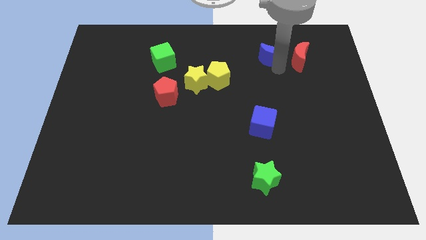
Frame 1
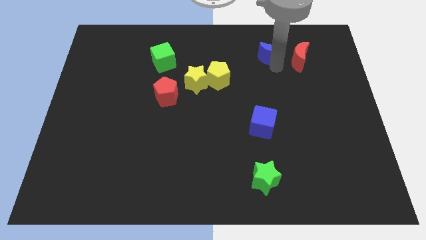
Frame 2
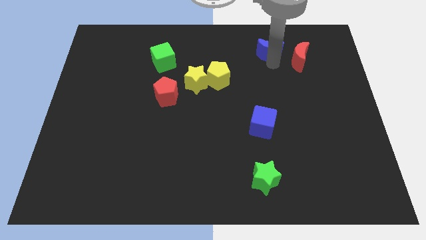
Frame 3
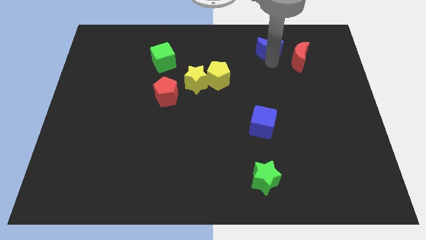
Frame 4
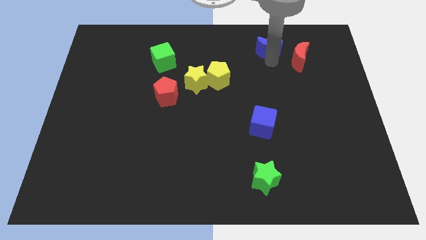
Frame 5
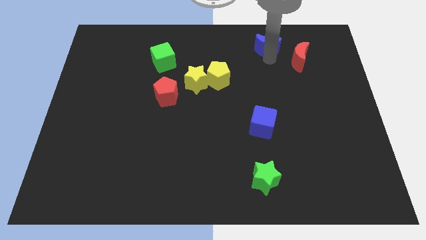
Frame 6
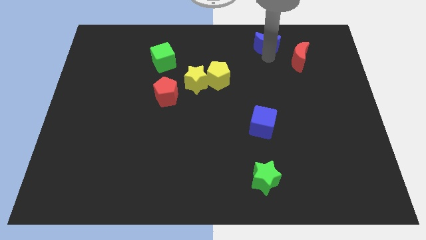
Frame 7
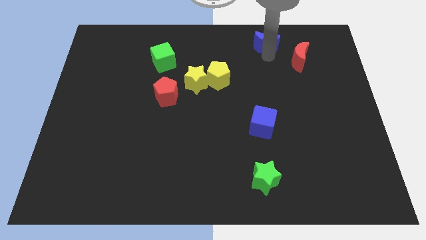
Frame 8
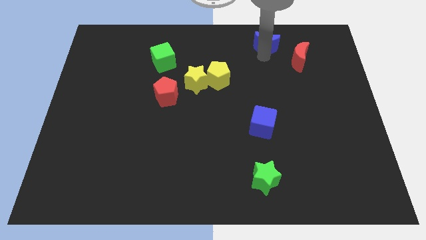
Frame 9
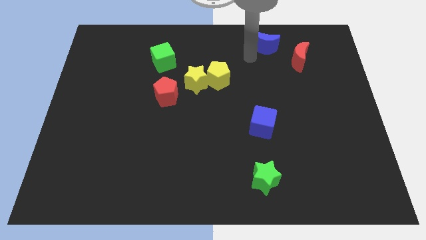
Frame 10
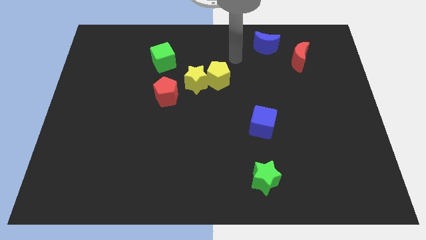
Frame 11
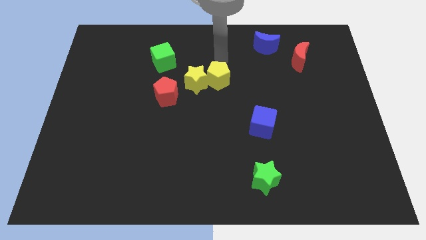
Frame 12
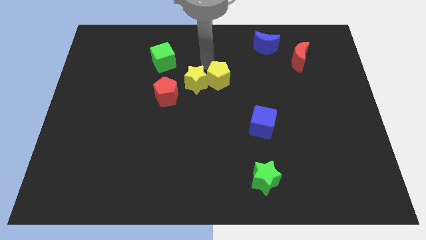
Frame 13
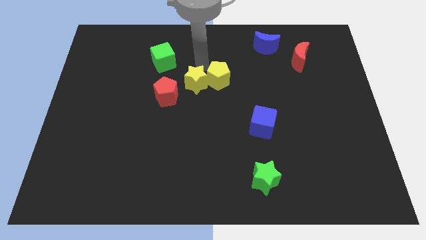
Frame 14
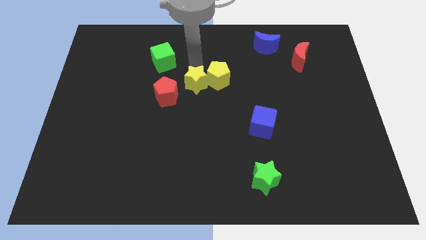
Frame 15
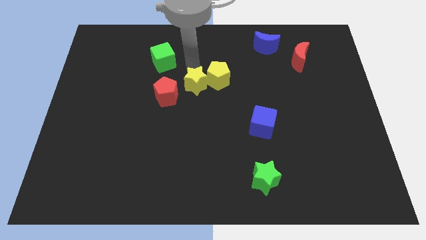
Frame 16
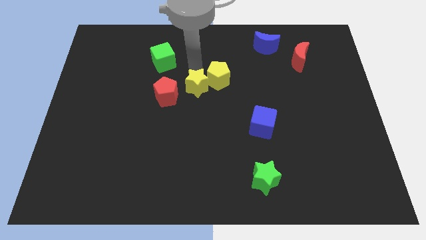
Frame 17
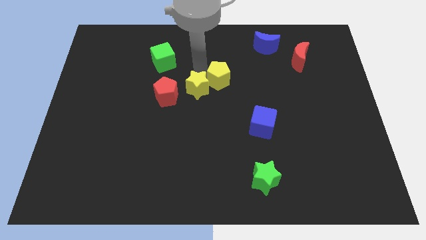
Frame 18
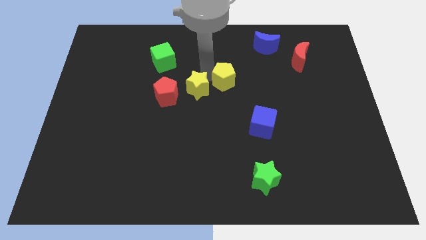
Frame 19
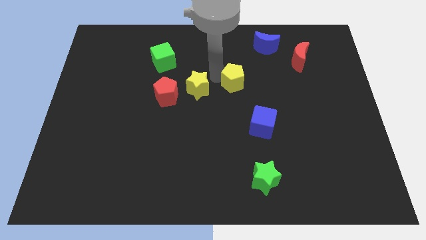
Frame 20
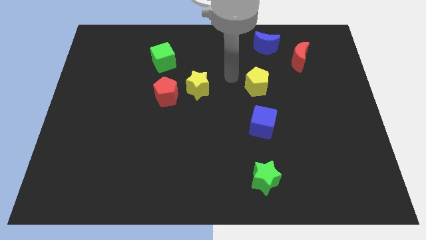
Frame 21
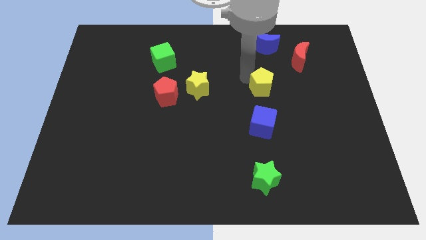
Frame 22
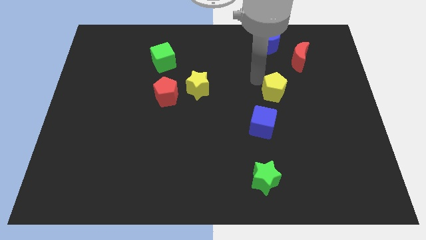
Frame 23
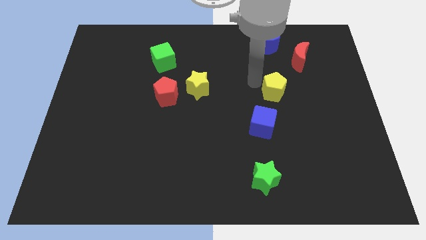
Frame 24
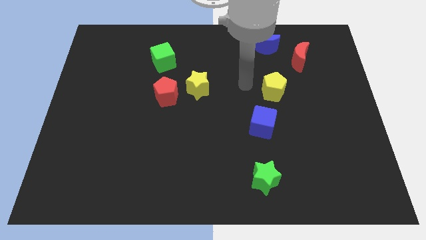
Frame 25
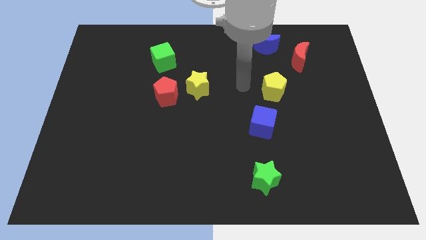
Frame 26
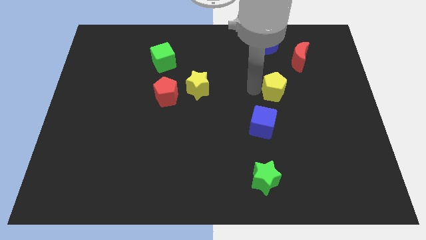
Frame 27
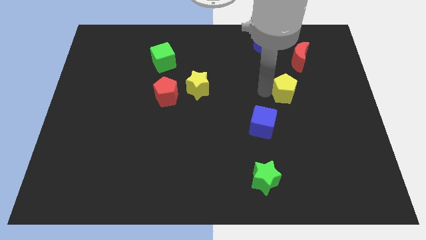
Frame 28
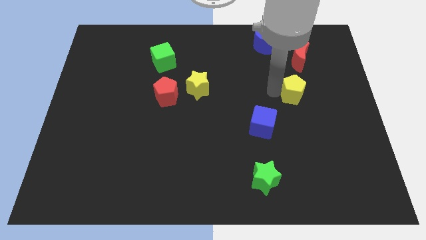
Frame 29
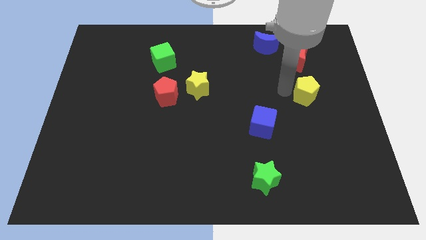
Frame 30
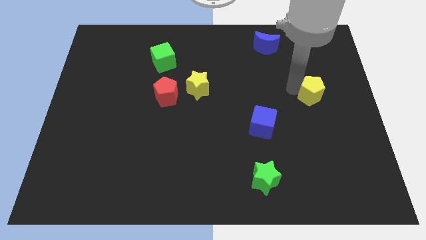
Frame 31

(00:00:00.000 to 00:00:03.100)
move the yellow pentagon towards the center right

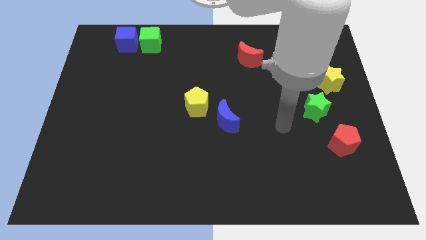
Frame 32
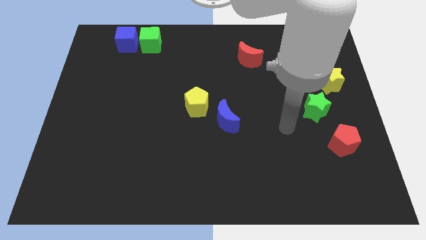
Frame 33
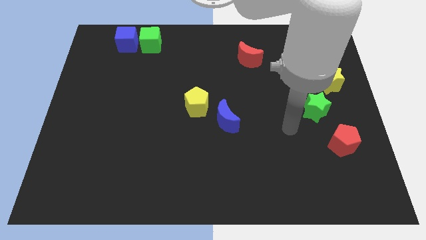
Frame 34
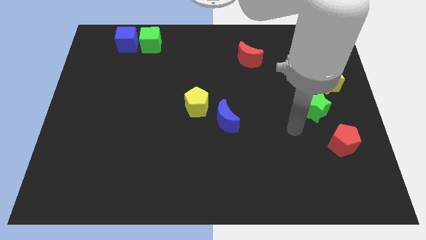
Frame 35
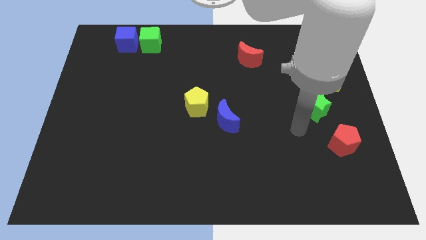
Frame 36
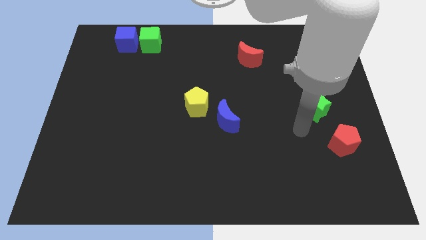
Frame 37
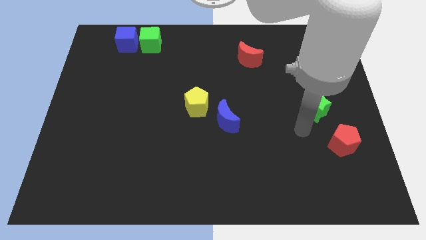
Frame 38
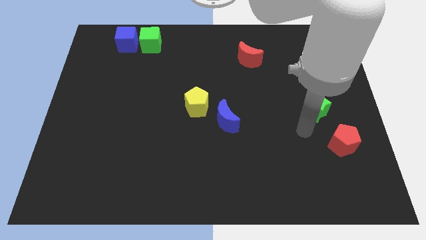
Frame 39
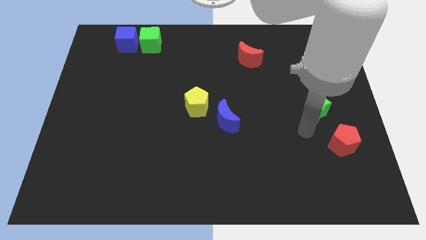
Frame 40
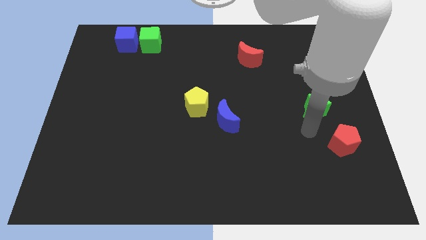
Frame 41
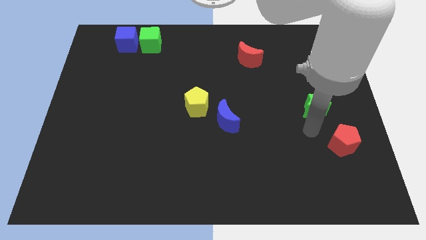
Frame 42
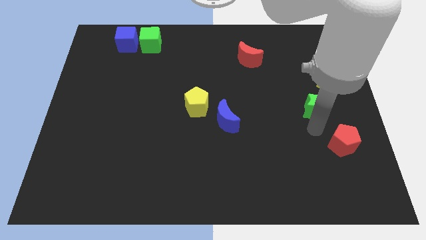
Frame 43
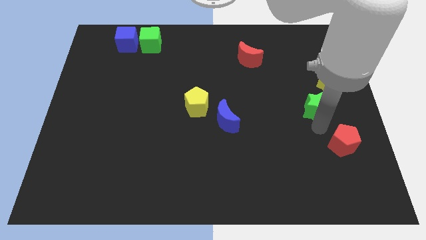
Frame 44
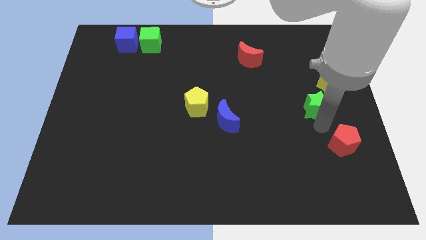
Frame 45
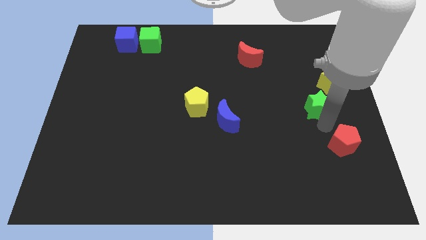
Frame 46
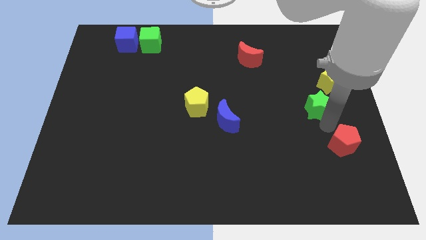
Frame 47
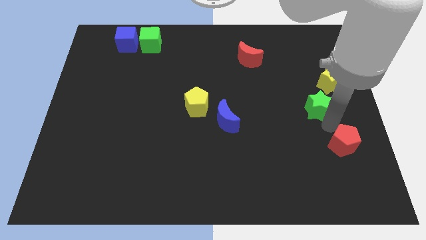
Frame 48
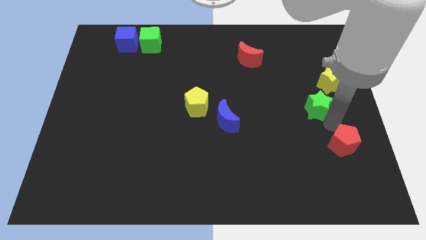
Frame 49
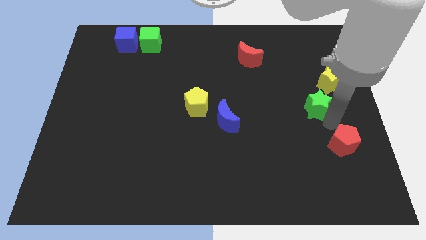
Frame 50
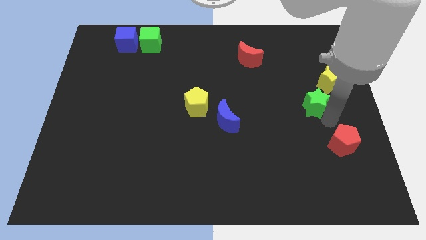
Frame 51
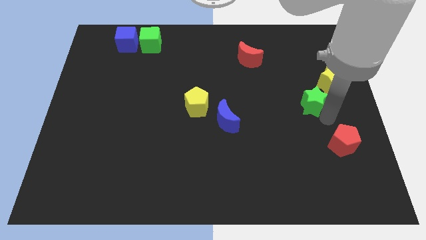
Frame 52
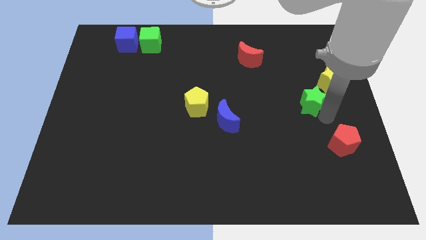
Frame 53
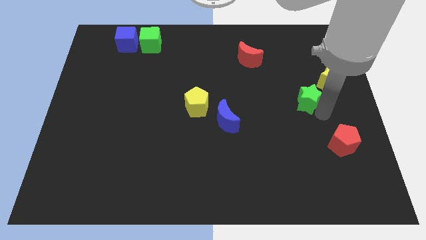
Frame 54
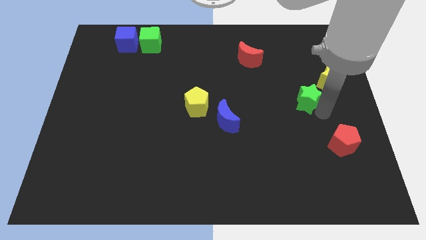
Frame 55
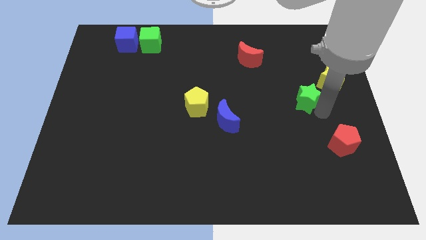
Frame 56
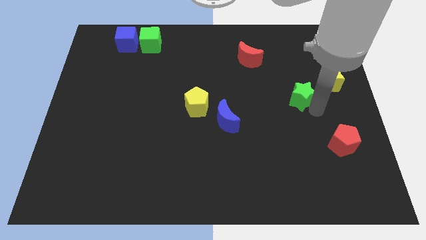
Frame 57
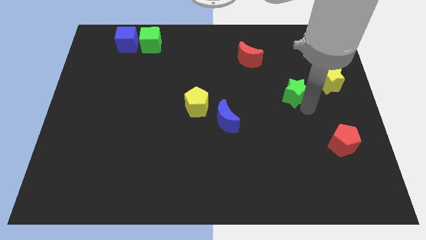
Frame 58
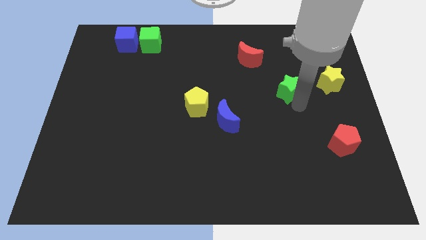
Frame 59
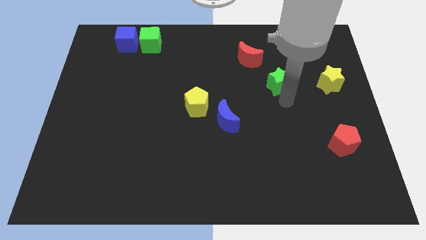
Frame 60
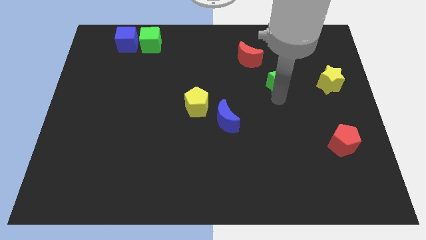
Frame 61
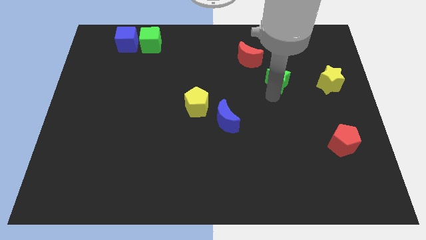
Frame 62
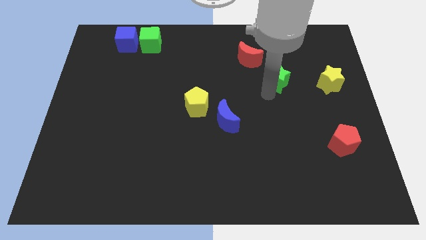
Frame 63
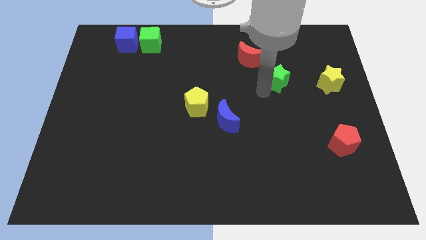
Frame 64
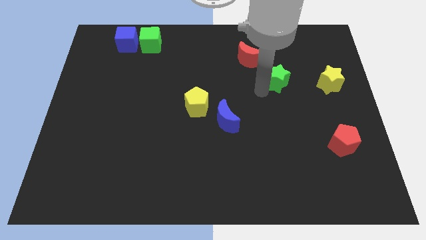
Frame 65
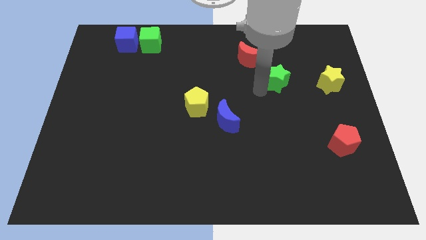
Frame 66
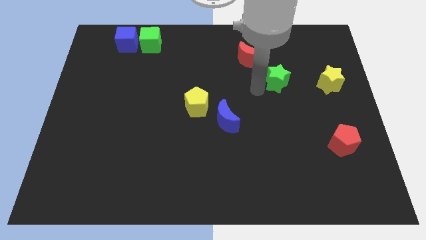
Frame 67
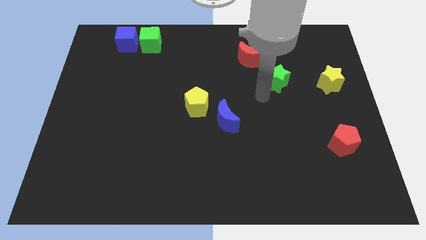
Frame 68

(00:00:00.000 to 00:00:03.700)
move the green star below the red moon

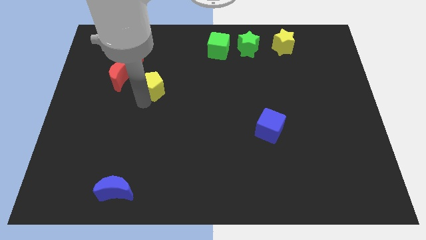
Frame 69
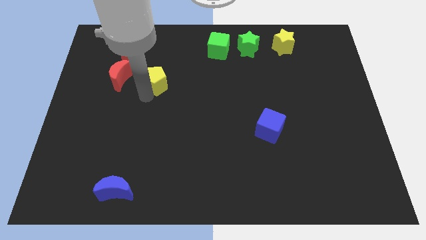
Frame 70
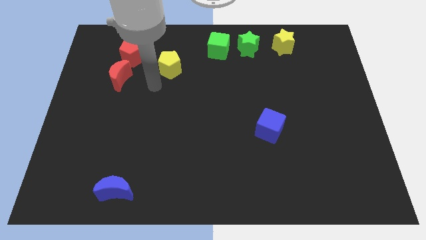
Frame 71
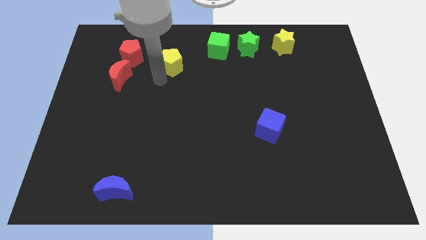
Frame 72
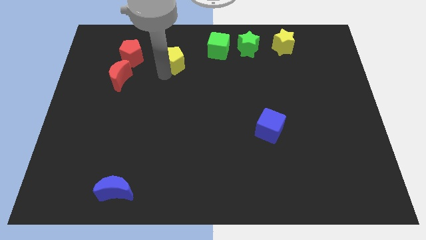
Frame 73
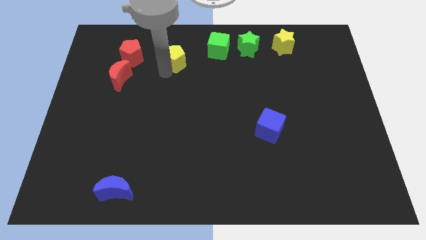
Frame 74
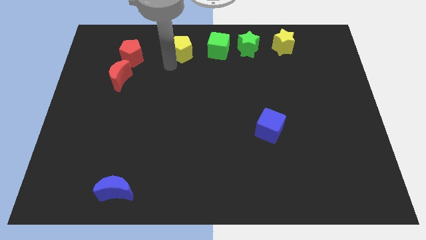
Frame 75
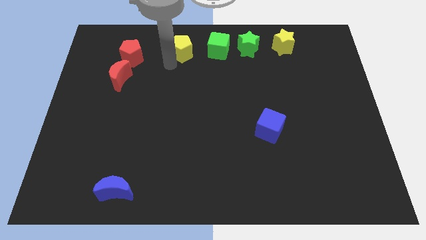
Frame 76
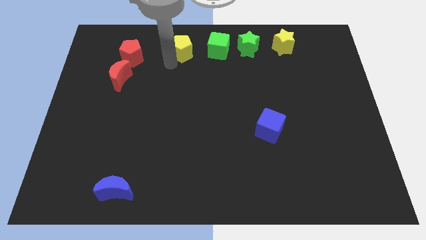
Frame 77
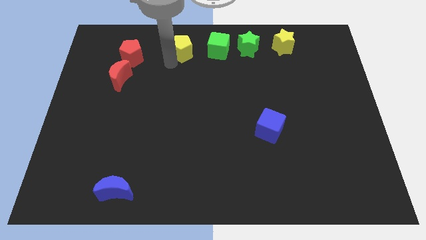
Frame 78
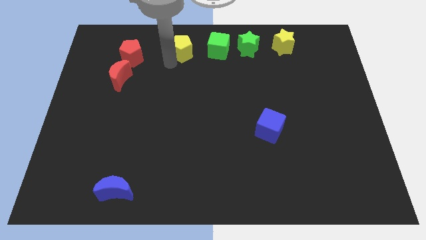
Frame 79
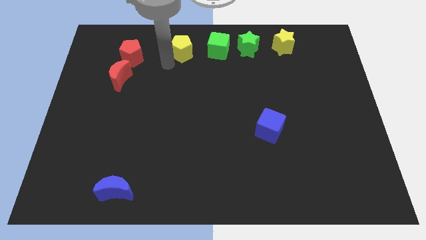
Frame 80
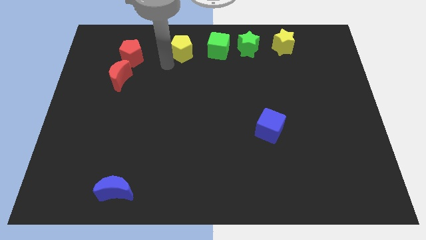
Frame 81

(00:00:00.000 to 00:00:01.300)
push the yellow pentagon left to the green cube

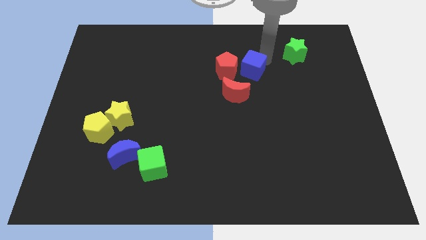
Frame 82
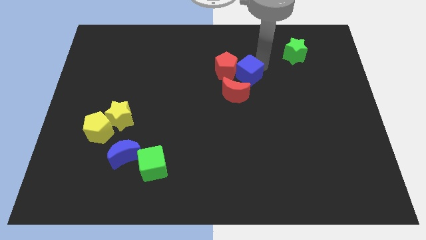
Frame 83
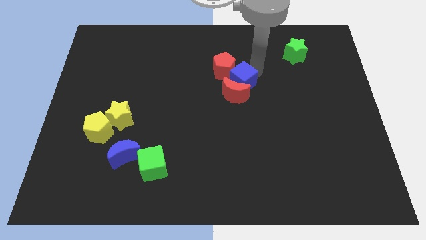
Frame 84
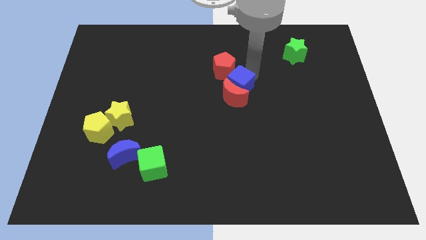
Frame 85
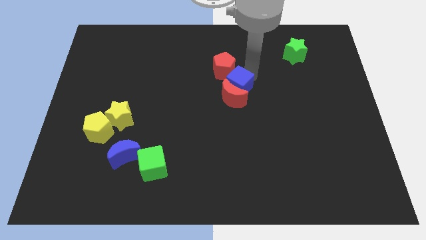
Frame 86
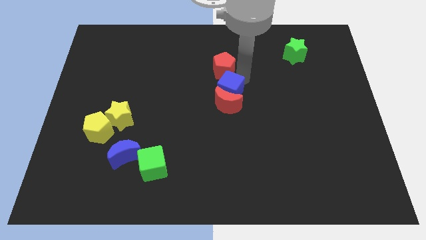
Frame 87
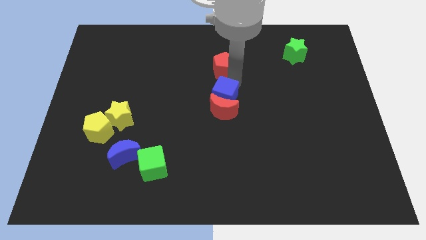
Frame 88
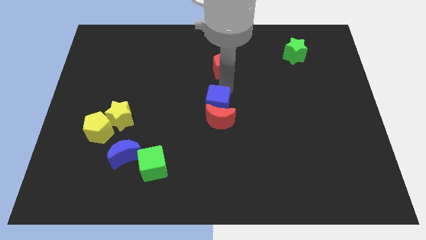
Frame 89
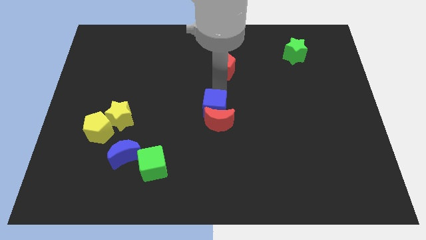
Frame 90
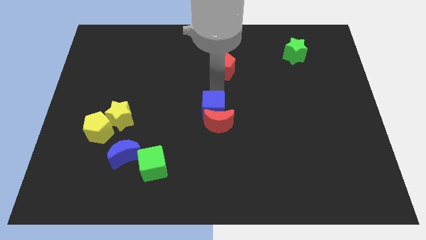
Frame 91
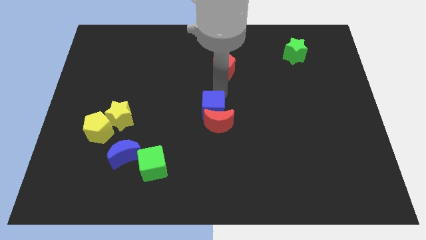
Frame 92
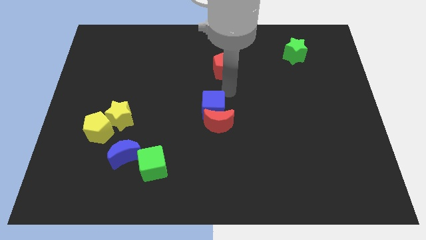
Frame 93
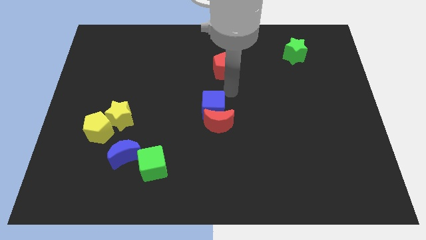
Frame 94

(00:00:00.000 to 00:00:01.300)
move red crescent and blue cube in the center
